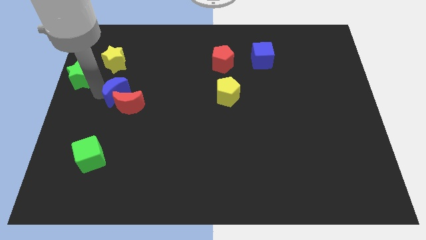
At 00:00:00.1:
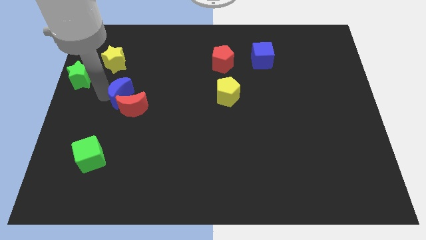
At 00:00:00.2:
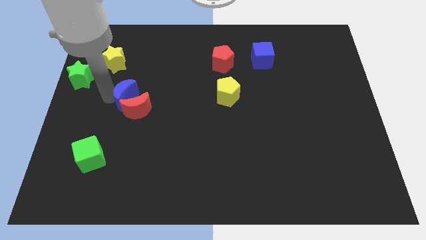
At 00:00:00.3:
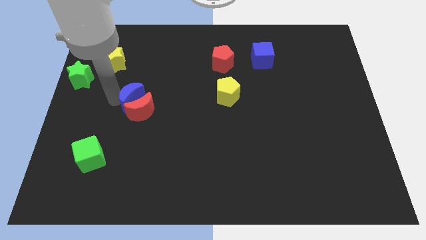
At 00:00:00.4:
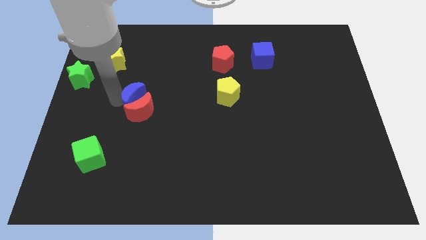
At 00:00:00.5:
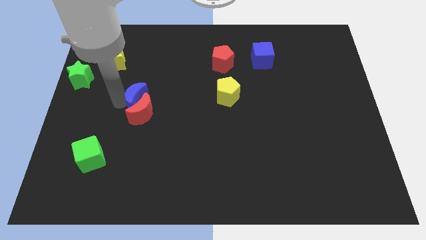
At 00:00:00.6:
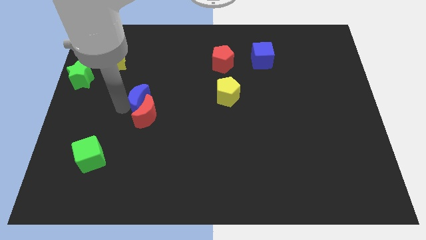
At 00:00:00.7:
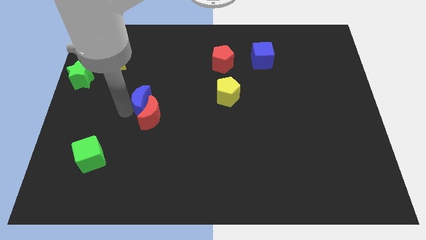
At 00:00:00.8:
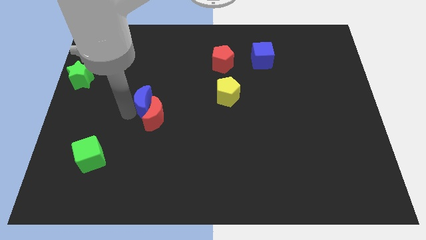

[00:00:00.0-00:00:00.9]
push the blue crescent along with the red crescent slightly towards bottom right of the board

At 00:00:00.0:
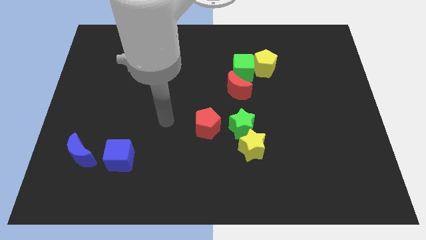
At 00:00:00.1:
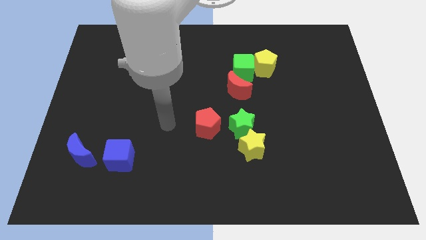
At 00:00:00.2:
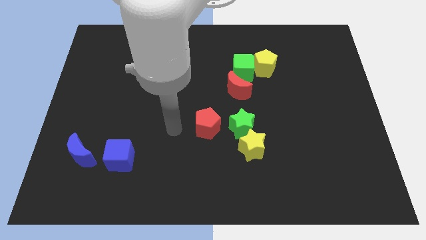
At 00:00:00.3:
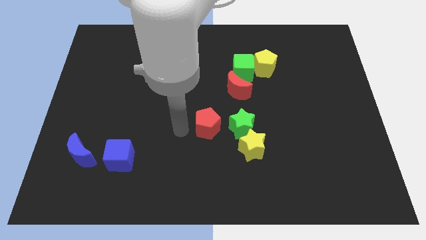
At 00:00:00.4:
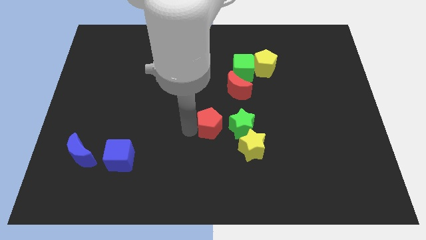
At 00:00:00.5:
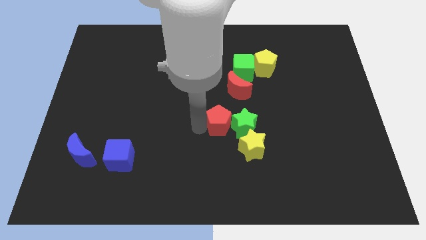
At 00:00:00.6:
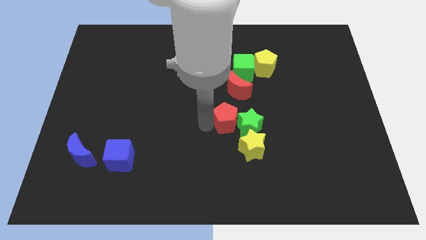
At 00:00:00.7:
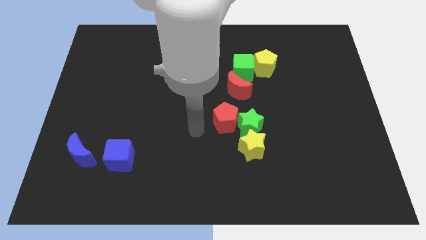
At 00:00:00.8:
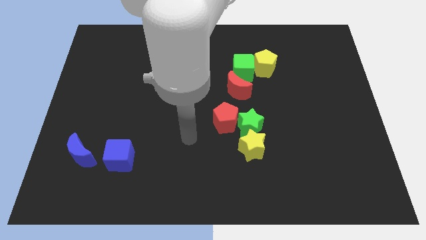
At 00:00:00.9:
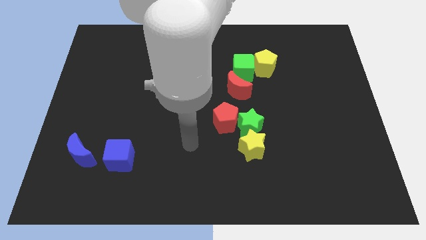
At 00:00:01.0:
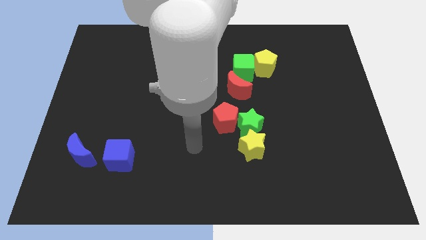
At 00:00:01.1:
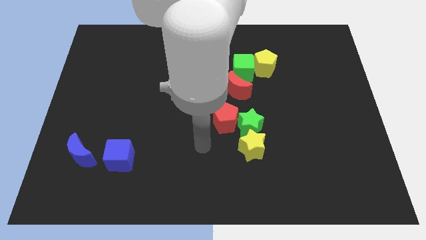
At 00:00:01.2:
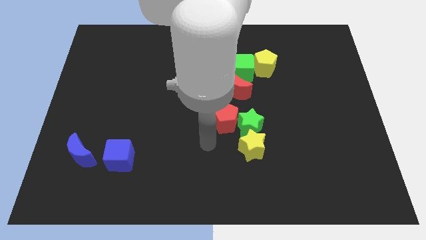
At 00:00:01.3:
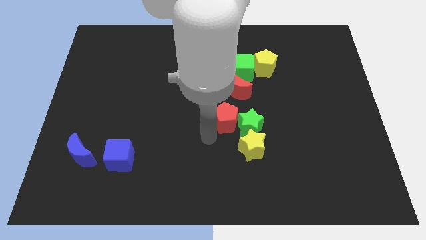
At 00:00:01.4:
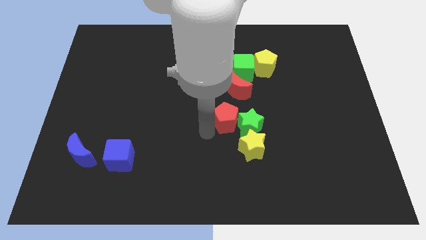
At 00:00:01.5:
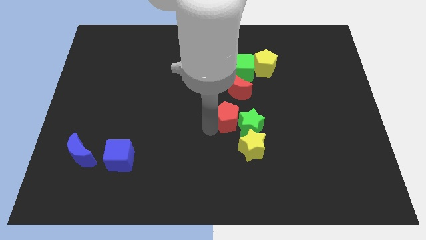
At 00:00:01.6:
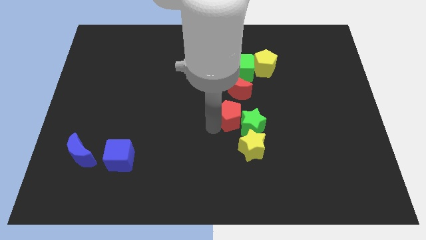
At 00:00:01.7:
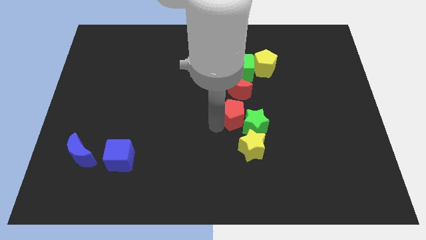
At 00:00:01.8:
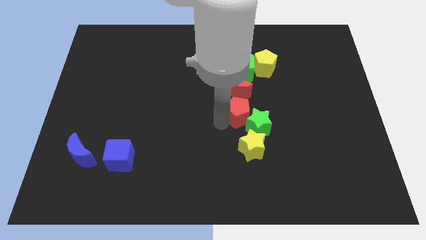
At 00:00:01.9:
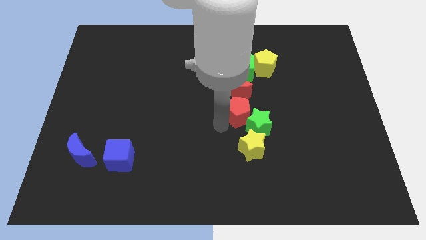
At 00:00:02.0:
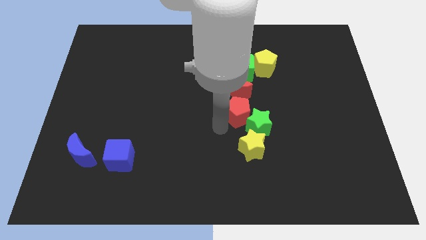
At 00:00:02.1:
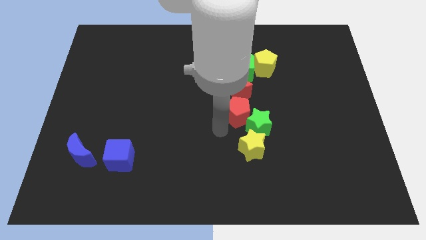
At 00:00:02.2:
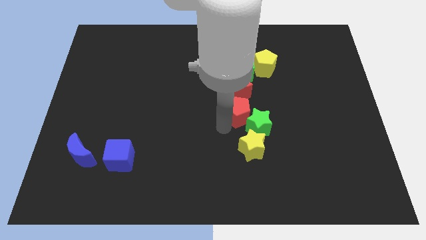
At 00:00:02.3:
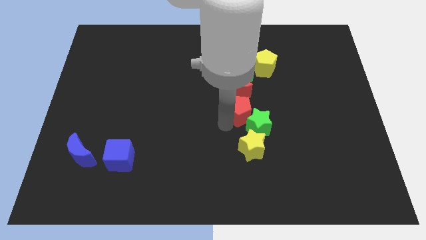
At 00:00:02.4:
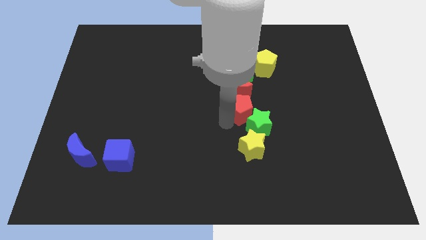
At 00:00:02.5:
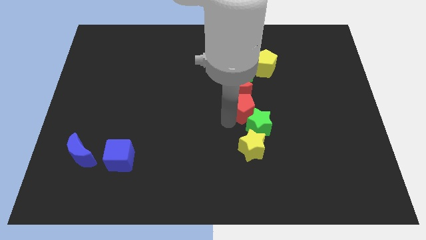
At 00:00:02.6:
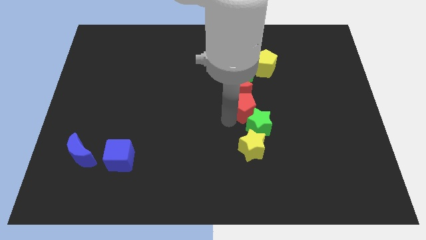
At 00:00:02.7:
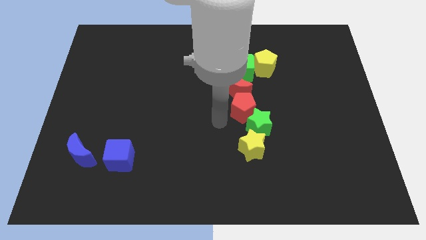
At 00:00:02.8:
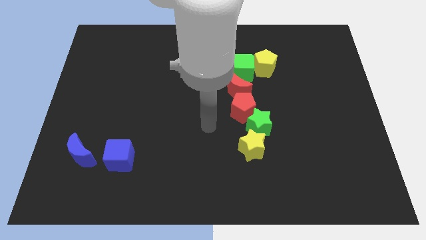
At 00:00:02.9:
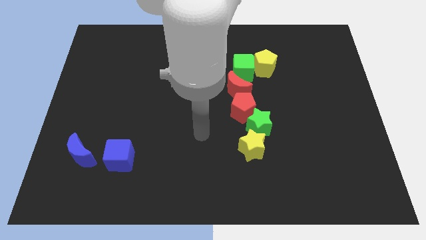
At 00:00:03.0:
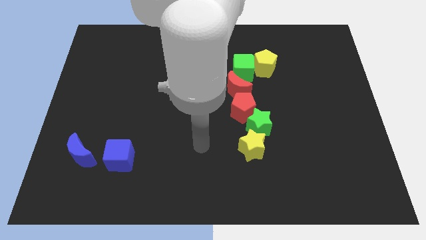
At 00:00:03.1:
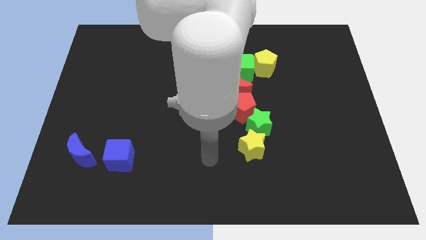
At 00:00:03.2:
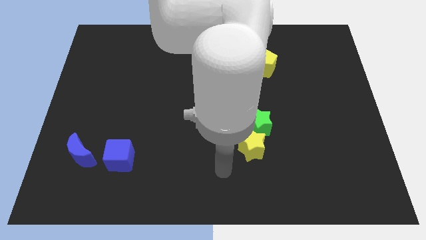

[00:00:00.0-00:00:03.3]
move red pentagon into red crescent

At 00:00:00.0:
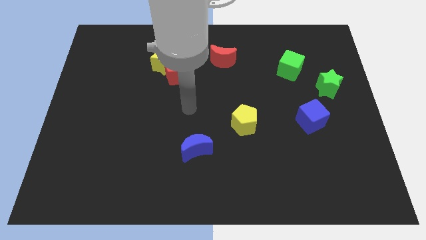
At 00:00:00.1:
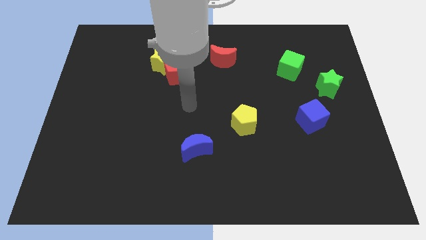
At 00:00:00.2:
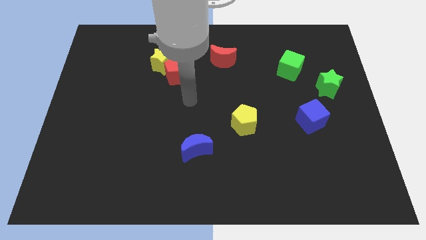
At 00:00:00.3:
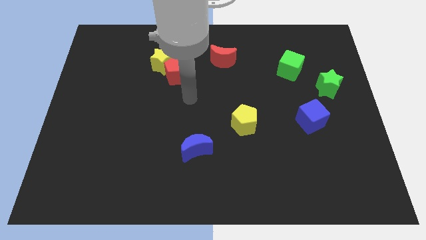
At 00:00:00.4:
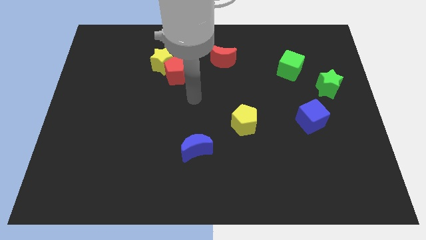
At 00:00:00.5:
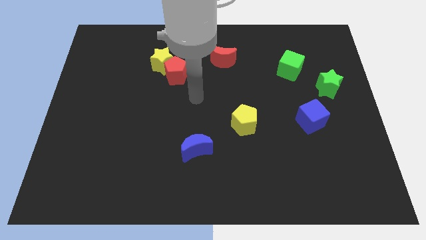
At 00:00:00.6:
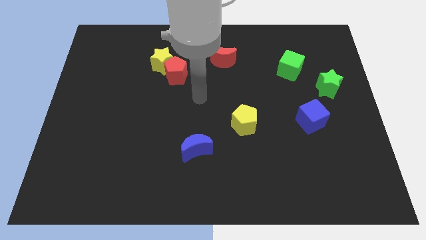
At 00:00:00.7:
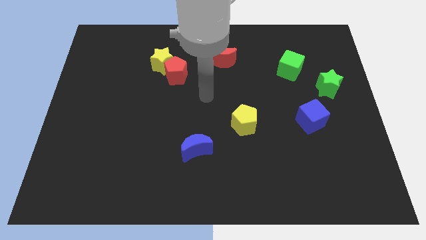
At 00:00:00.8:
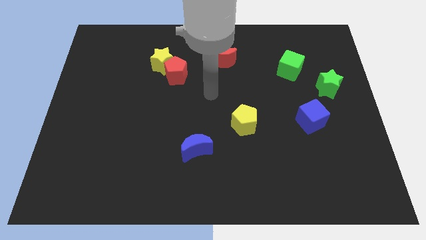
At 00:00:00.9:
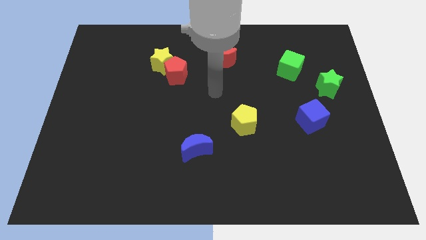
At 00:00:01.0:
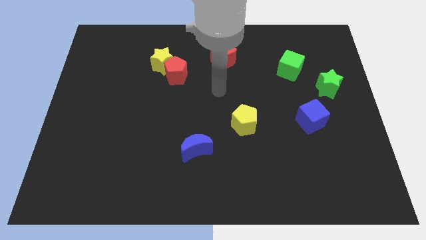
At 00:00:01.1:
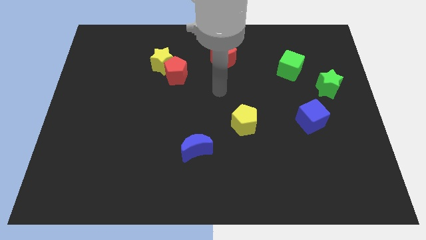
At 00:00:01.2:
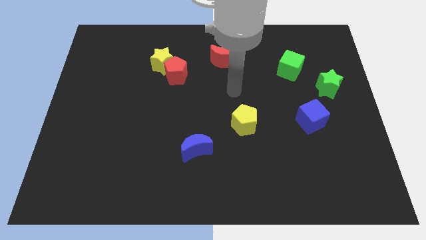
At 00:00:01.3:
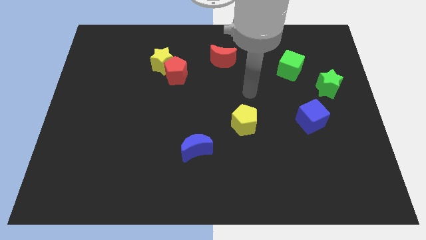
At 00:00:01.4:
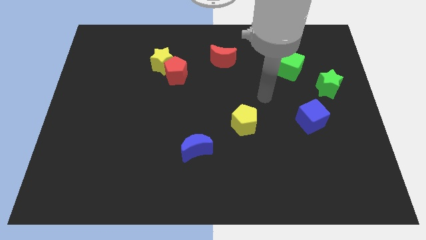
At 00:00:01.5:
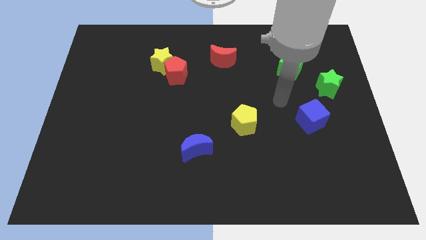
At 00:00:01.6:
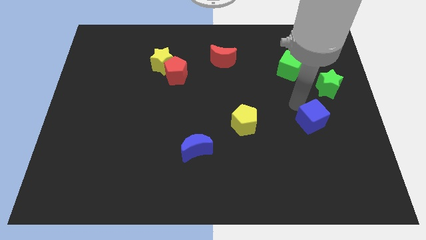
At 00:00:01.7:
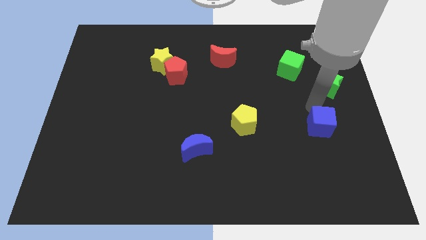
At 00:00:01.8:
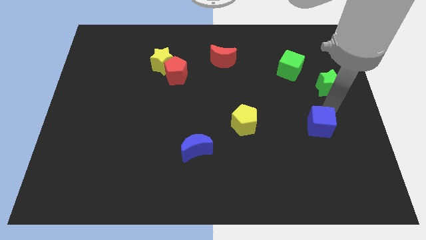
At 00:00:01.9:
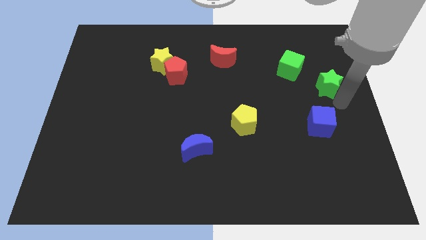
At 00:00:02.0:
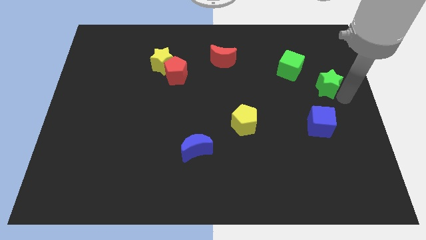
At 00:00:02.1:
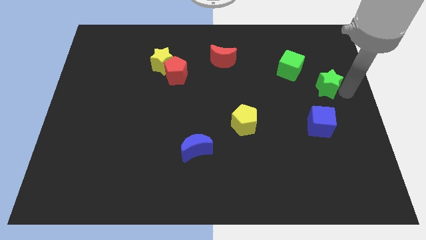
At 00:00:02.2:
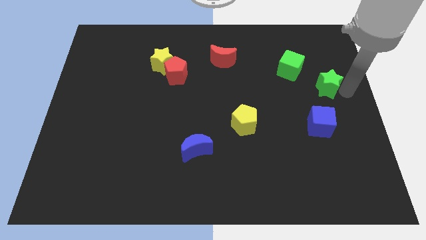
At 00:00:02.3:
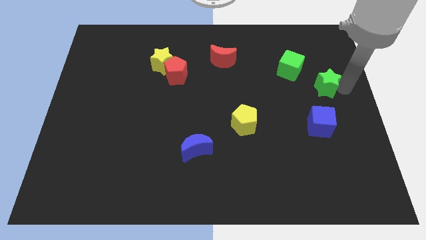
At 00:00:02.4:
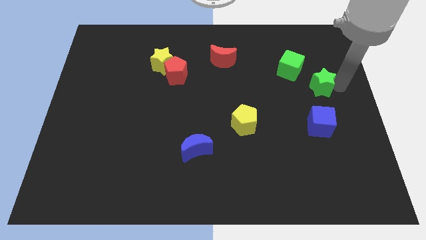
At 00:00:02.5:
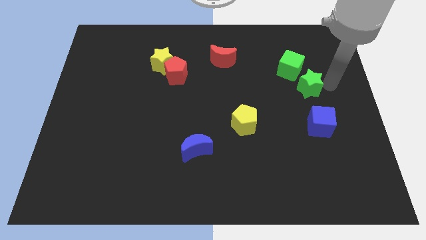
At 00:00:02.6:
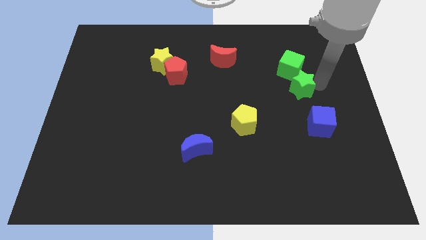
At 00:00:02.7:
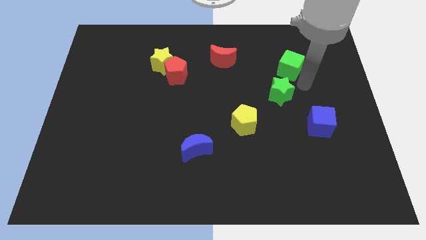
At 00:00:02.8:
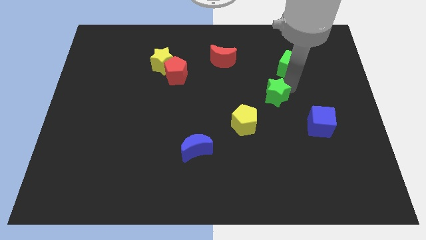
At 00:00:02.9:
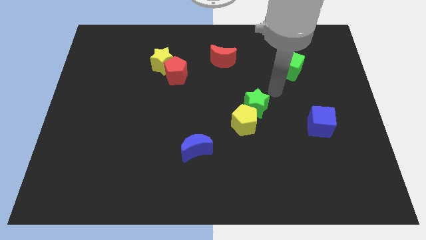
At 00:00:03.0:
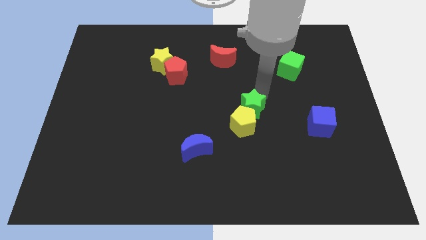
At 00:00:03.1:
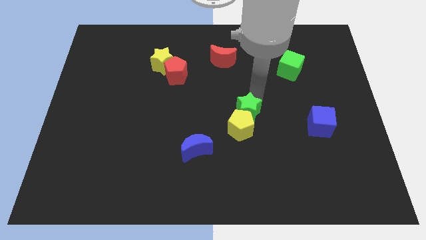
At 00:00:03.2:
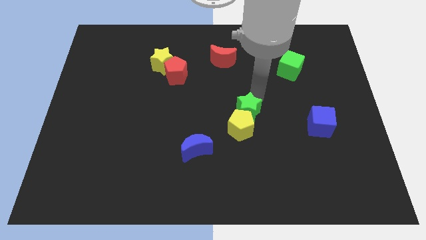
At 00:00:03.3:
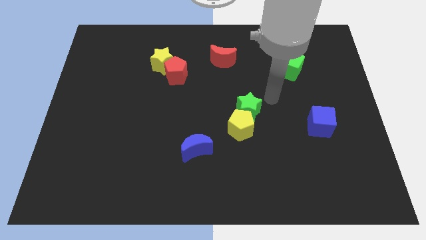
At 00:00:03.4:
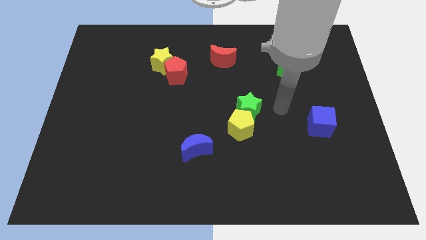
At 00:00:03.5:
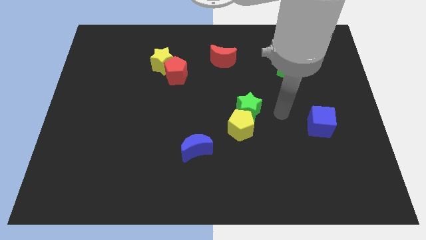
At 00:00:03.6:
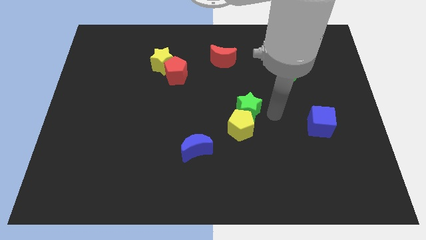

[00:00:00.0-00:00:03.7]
push the green star into the yellow pentagon

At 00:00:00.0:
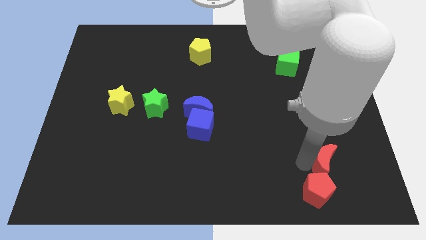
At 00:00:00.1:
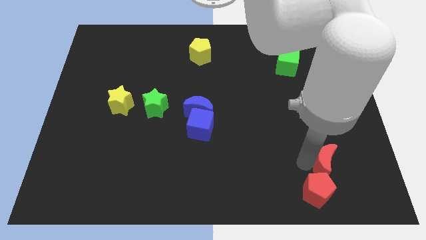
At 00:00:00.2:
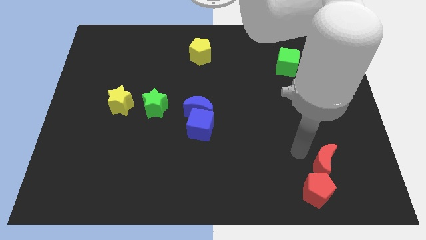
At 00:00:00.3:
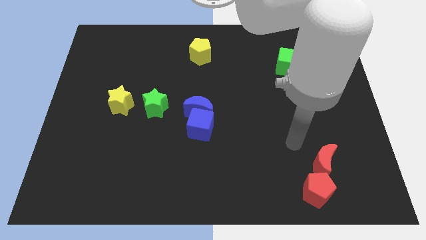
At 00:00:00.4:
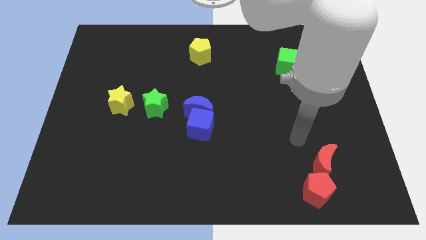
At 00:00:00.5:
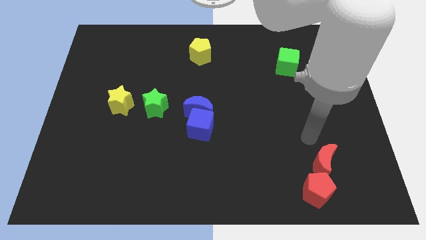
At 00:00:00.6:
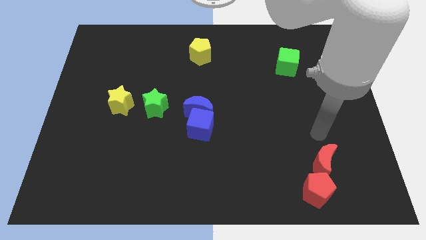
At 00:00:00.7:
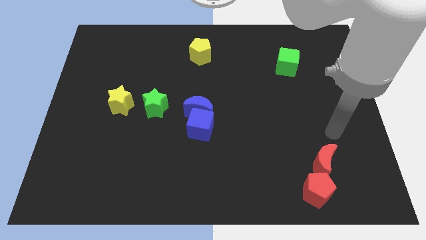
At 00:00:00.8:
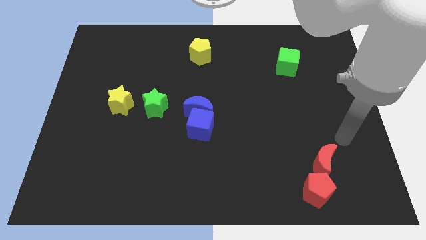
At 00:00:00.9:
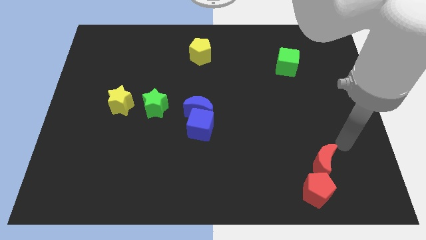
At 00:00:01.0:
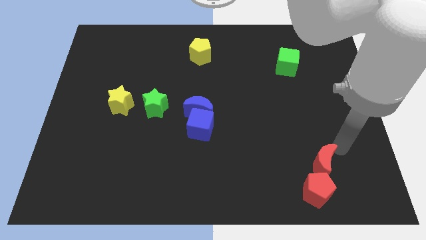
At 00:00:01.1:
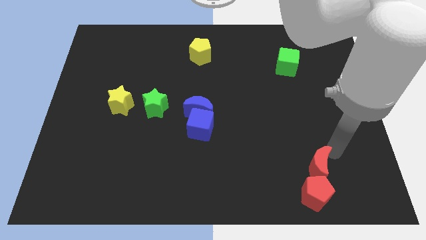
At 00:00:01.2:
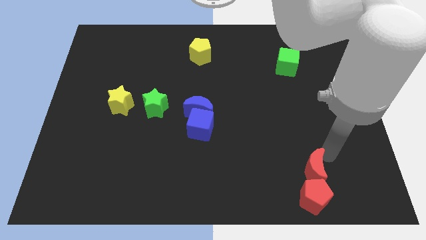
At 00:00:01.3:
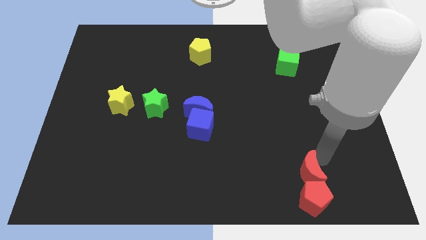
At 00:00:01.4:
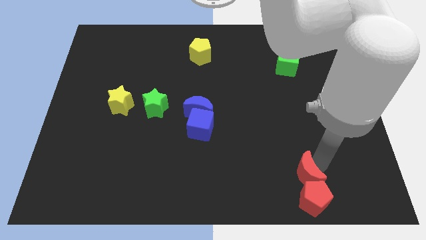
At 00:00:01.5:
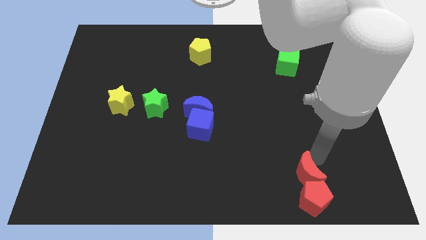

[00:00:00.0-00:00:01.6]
slide the red objects slightly downwards
